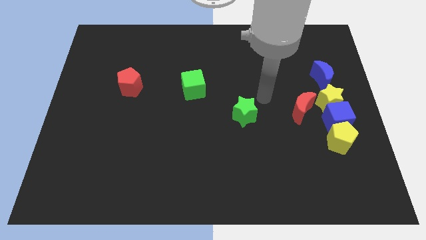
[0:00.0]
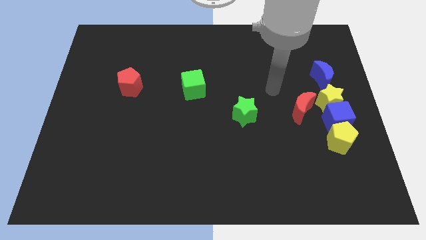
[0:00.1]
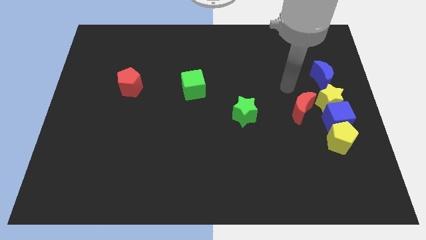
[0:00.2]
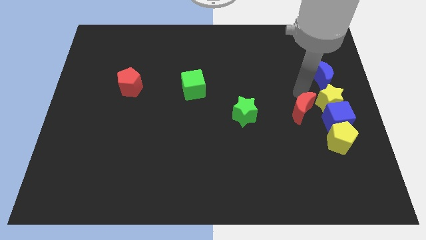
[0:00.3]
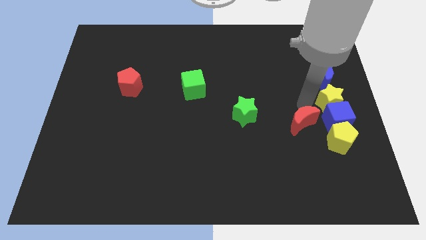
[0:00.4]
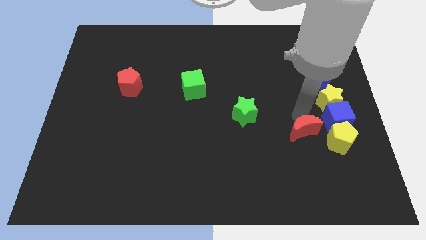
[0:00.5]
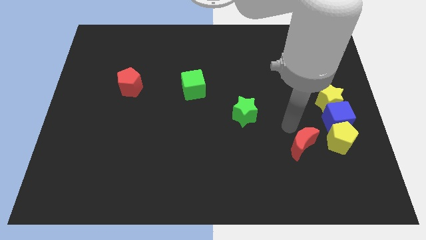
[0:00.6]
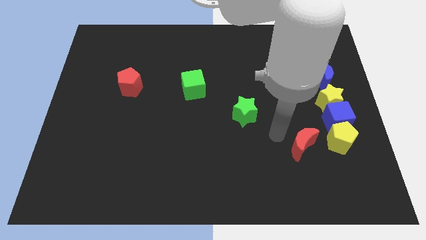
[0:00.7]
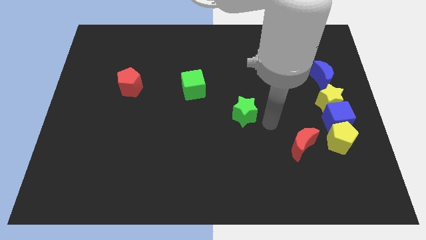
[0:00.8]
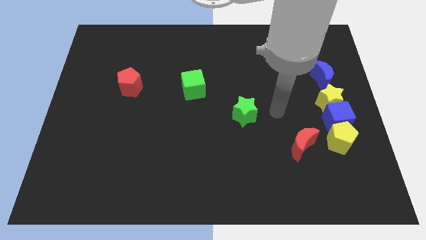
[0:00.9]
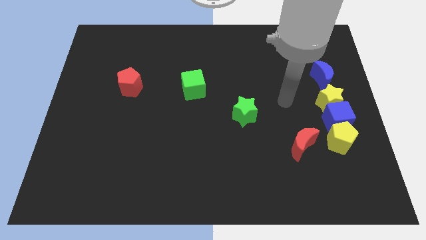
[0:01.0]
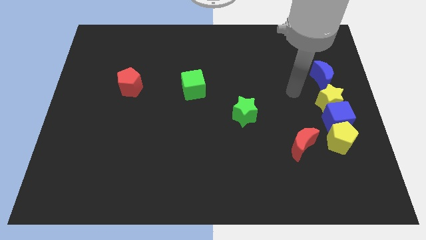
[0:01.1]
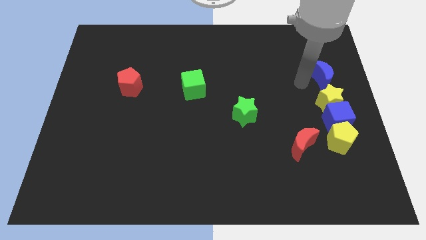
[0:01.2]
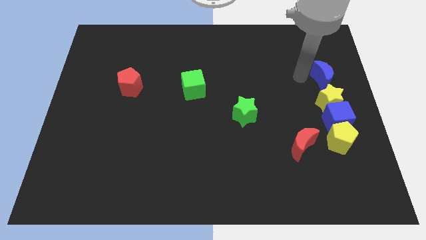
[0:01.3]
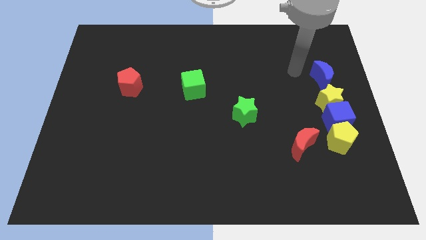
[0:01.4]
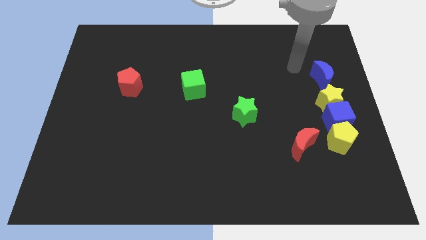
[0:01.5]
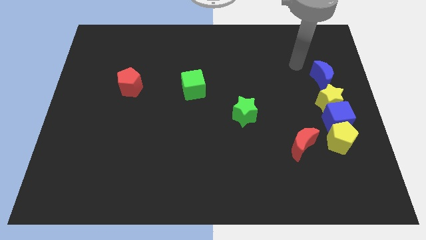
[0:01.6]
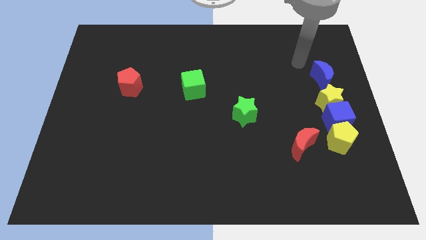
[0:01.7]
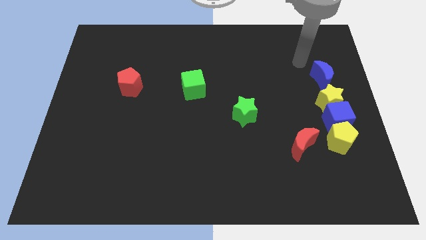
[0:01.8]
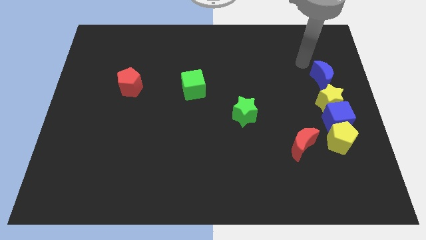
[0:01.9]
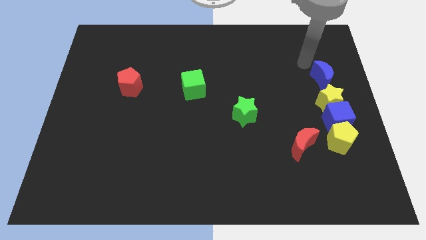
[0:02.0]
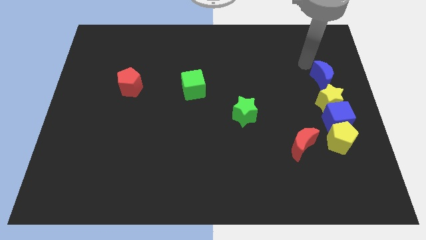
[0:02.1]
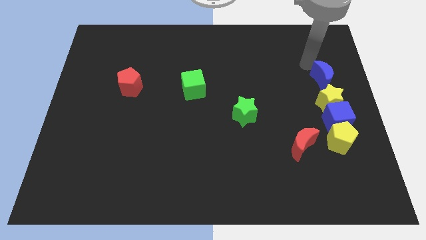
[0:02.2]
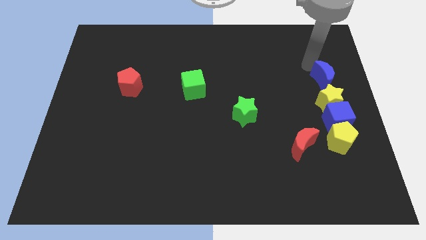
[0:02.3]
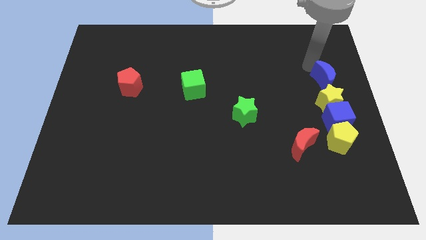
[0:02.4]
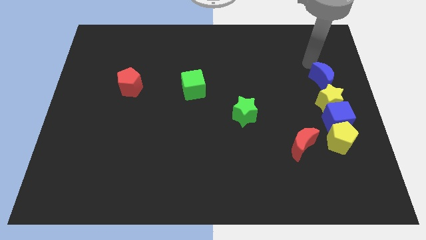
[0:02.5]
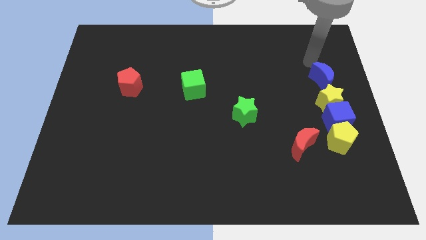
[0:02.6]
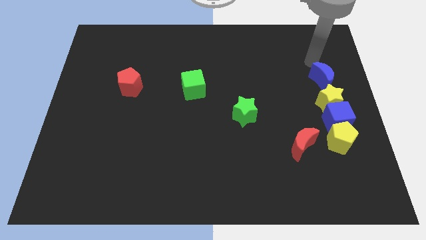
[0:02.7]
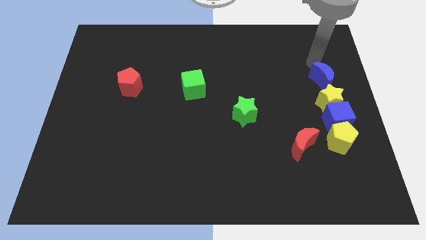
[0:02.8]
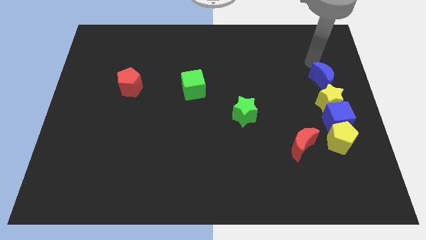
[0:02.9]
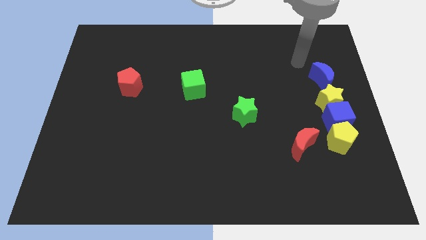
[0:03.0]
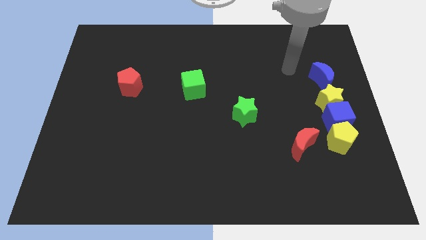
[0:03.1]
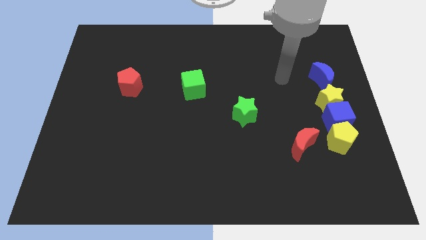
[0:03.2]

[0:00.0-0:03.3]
move your arm to the left of the blue moon

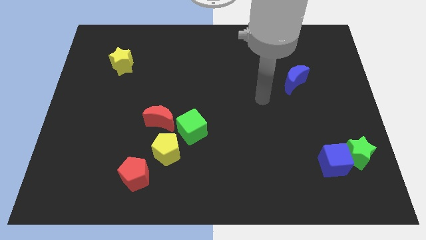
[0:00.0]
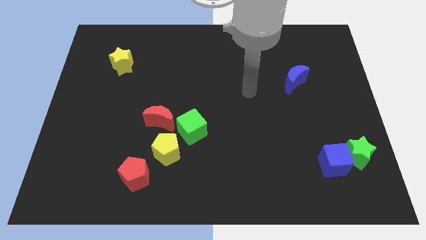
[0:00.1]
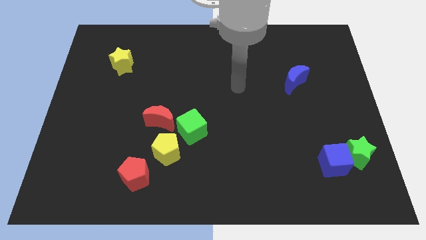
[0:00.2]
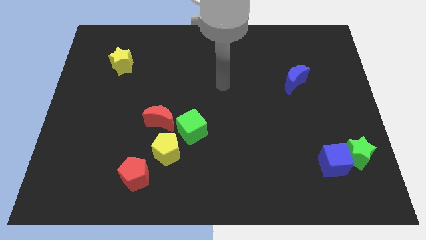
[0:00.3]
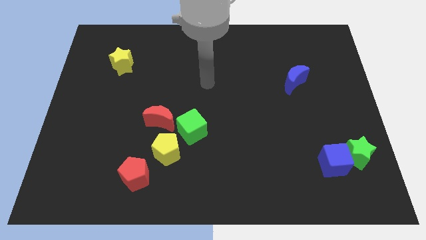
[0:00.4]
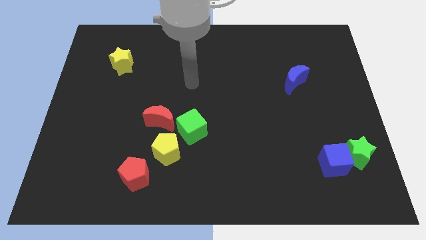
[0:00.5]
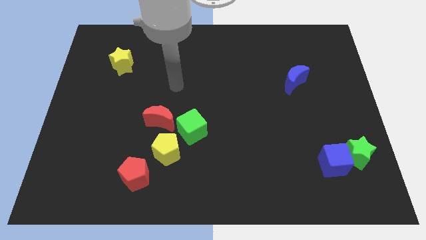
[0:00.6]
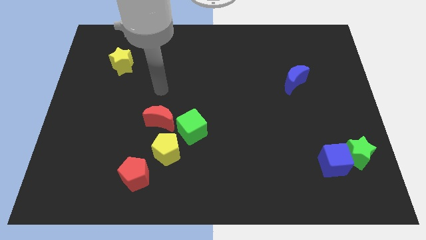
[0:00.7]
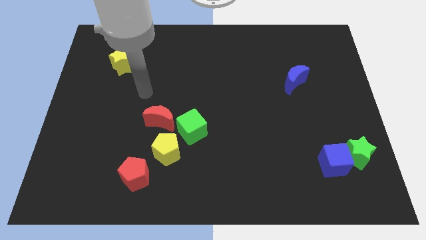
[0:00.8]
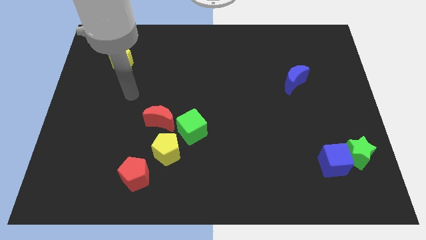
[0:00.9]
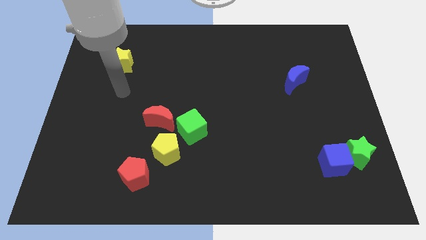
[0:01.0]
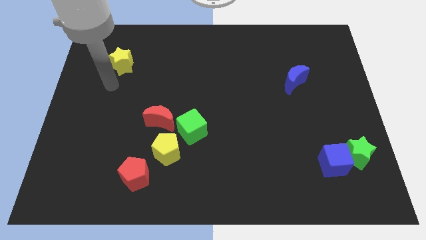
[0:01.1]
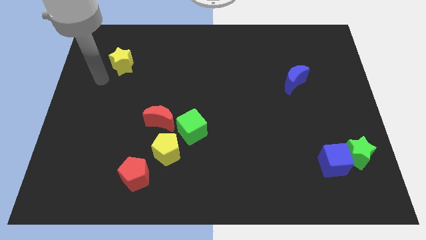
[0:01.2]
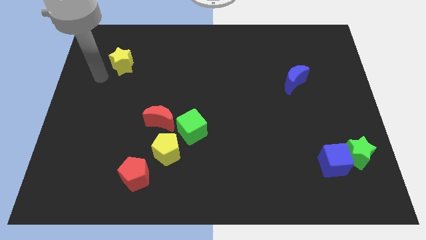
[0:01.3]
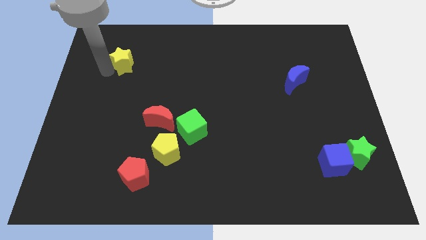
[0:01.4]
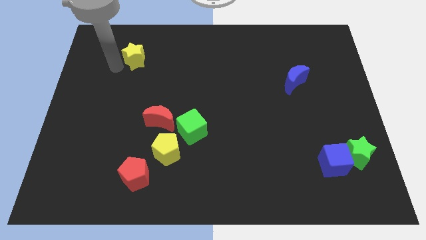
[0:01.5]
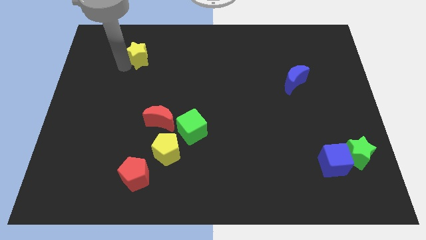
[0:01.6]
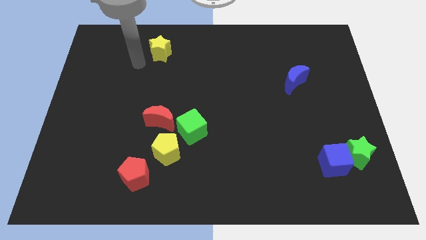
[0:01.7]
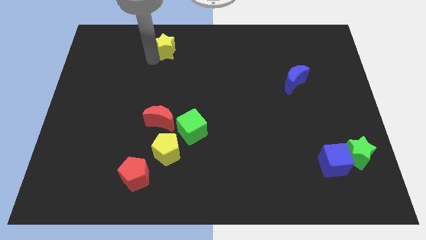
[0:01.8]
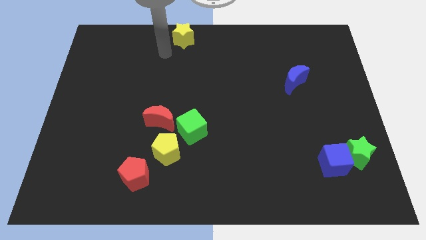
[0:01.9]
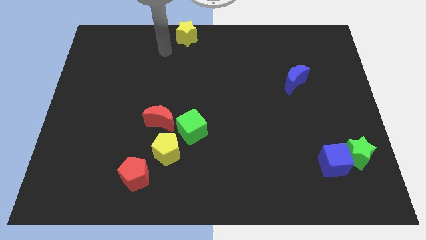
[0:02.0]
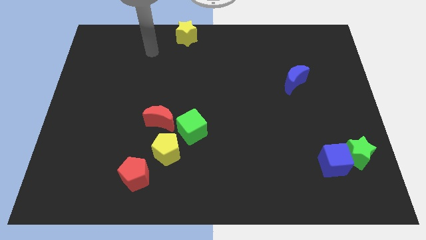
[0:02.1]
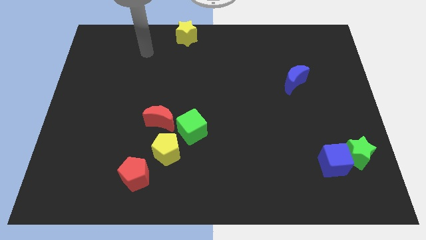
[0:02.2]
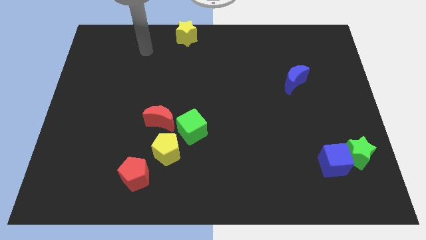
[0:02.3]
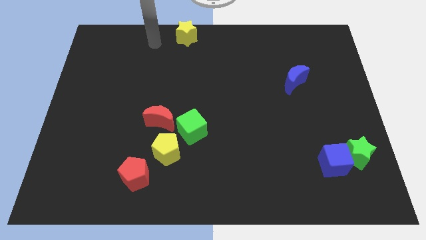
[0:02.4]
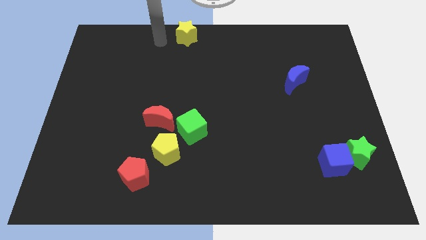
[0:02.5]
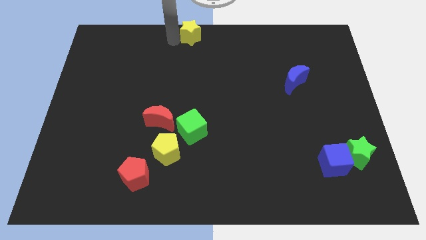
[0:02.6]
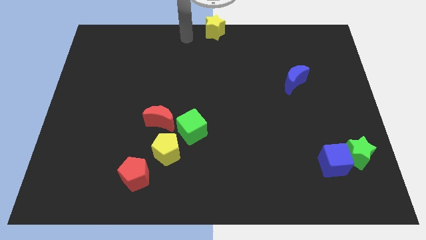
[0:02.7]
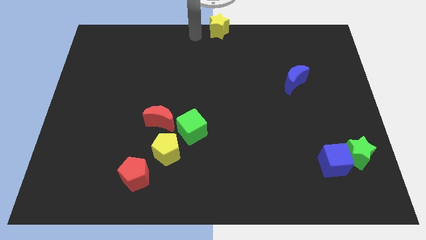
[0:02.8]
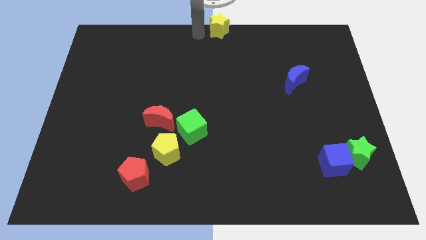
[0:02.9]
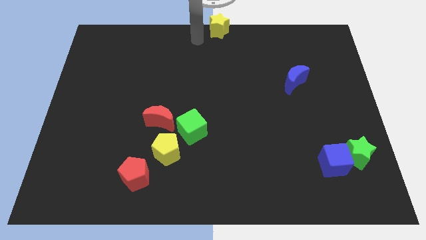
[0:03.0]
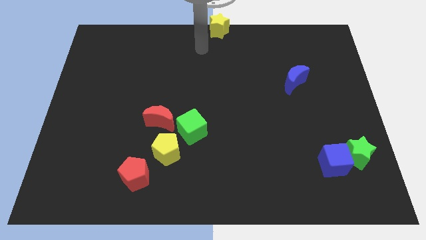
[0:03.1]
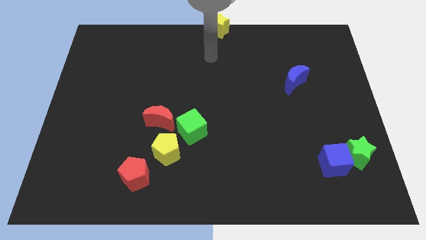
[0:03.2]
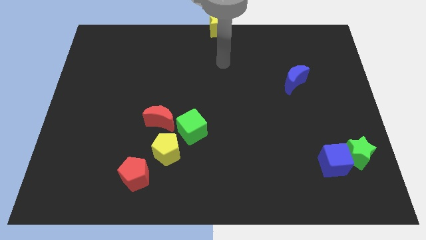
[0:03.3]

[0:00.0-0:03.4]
place the yellow star at the top left side of the blue moon

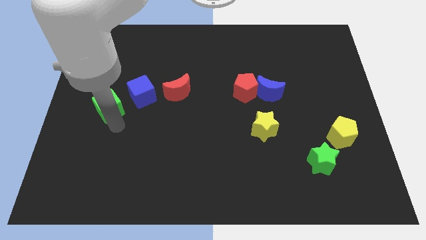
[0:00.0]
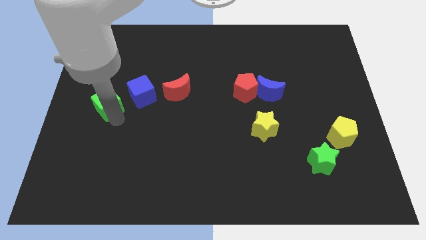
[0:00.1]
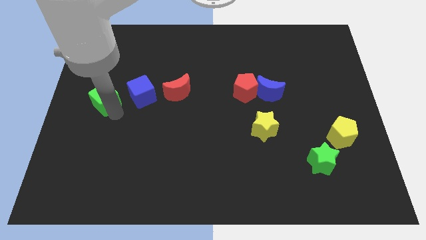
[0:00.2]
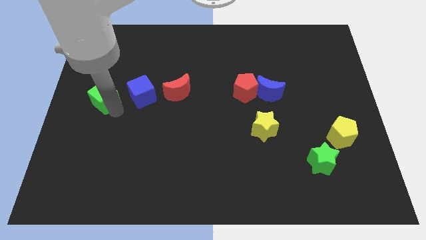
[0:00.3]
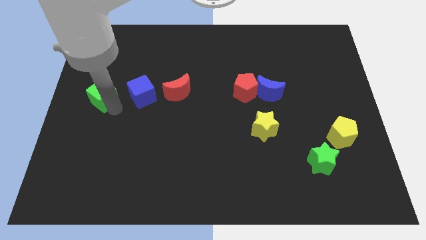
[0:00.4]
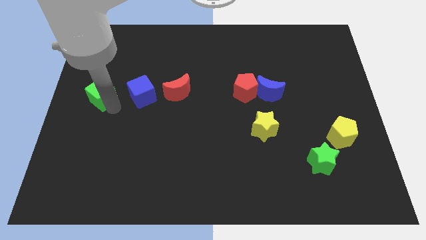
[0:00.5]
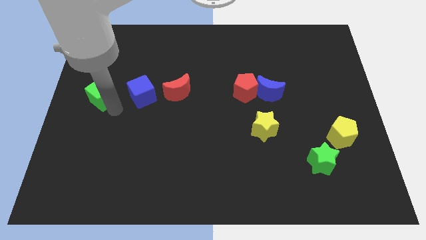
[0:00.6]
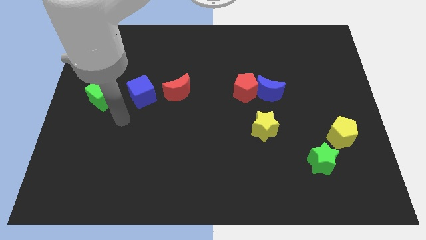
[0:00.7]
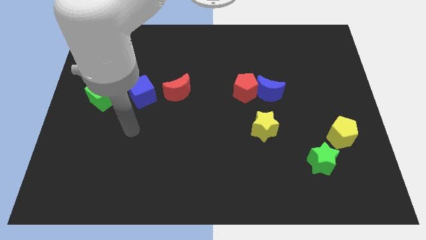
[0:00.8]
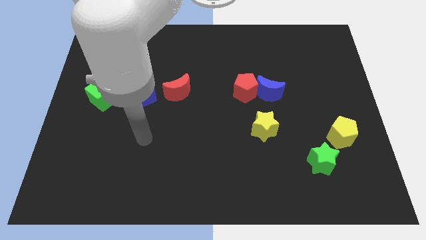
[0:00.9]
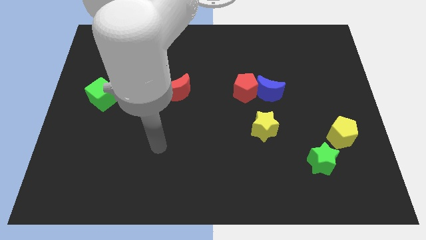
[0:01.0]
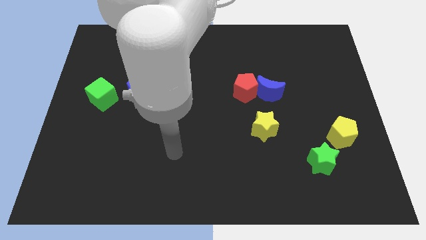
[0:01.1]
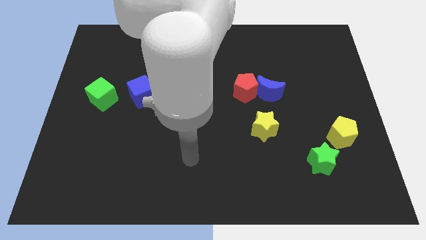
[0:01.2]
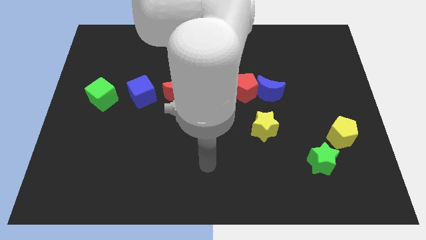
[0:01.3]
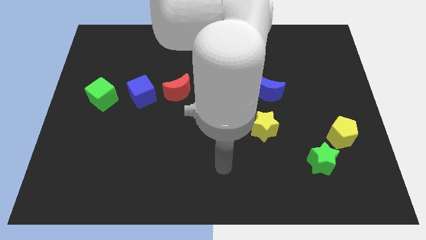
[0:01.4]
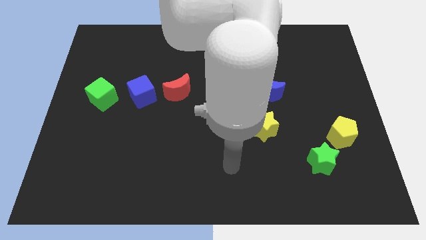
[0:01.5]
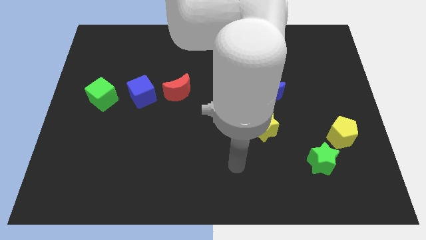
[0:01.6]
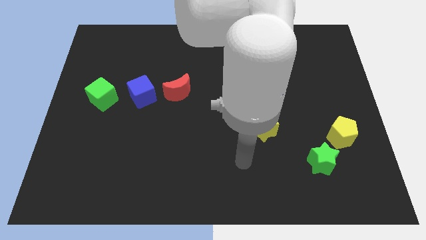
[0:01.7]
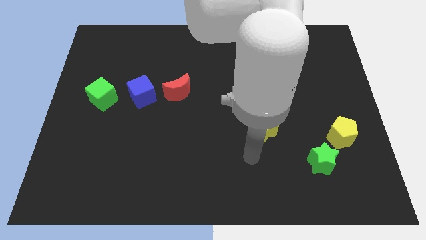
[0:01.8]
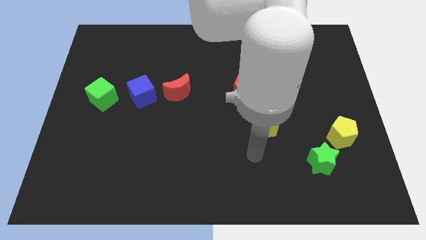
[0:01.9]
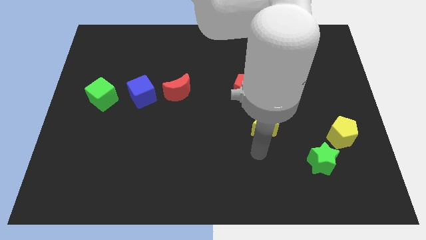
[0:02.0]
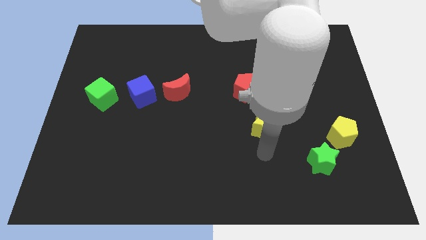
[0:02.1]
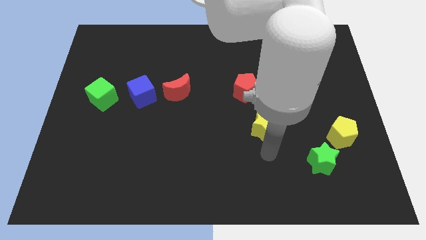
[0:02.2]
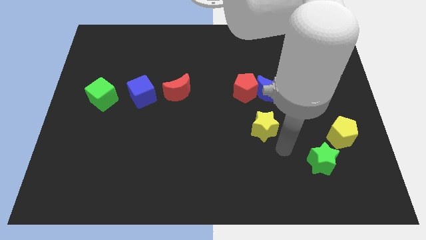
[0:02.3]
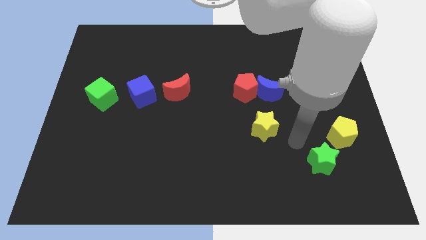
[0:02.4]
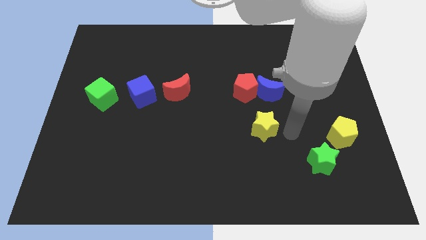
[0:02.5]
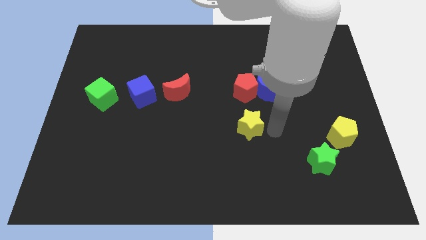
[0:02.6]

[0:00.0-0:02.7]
slighlty move the green cube
